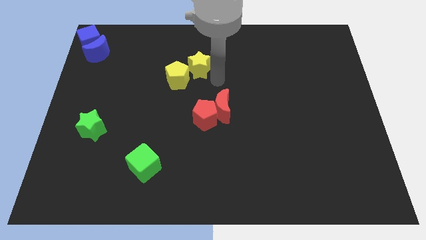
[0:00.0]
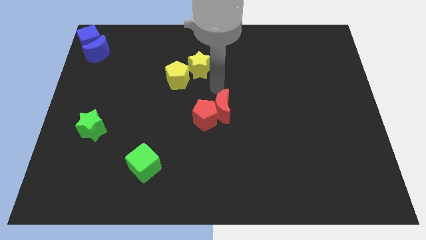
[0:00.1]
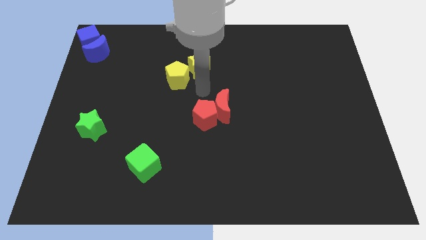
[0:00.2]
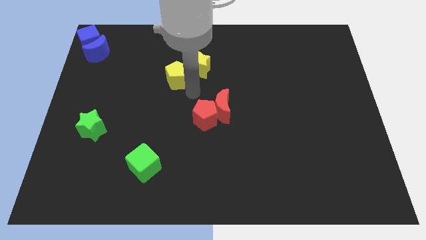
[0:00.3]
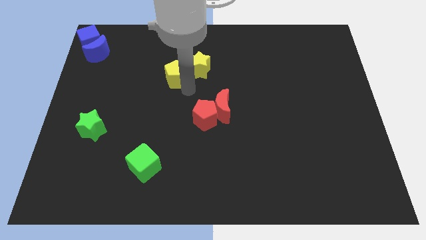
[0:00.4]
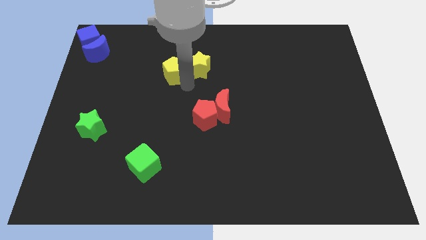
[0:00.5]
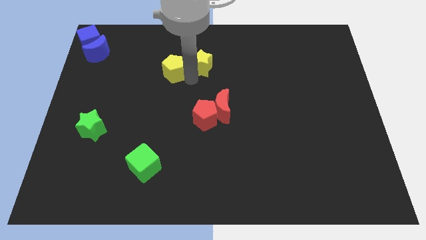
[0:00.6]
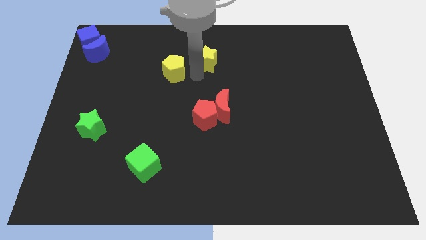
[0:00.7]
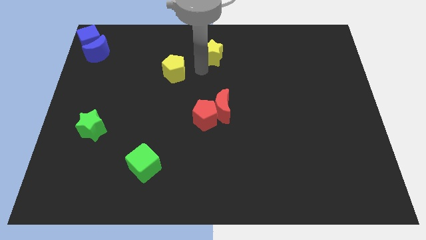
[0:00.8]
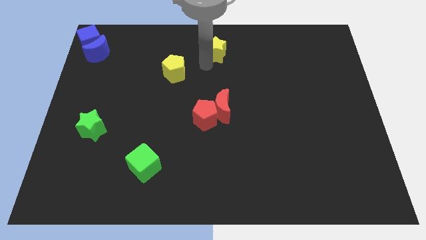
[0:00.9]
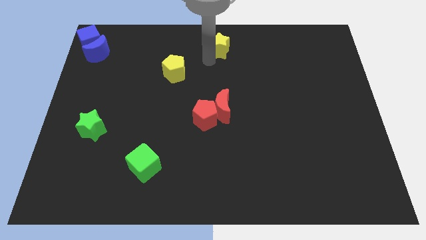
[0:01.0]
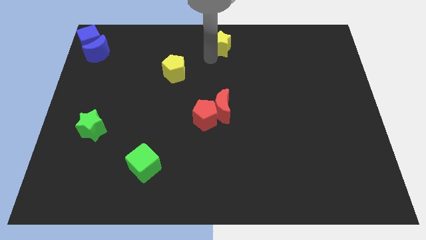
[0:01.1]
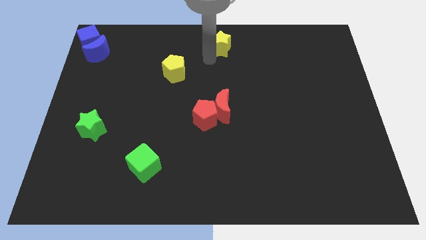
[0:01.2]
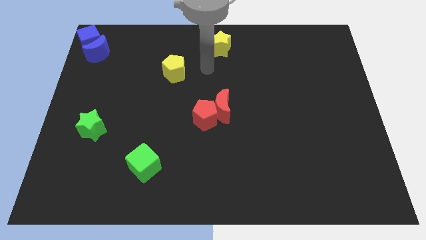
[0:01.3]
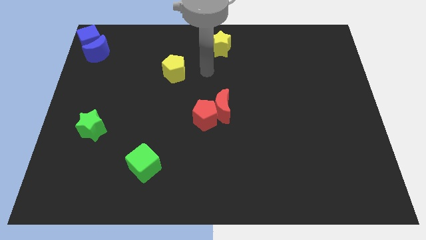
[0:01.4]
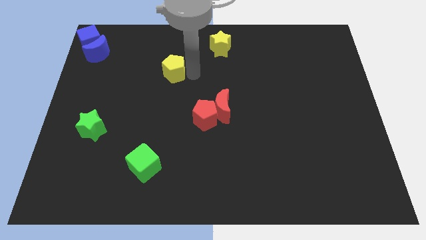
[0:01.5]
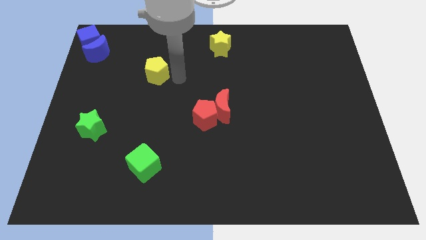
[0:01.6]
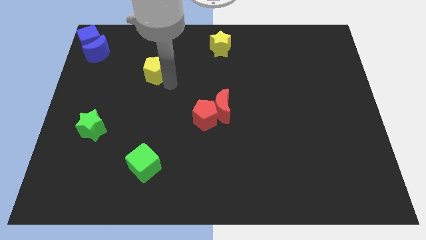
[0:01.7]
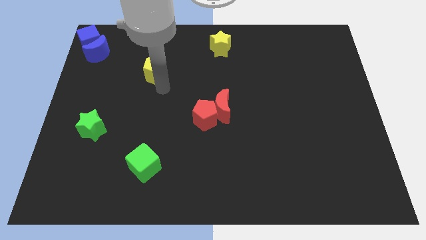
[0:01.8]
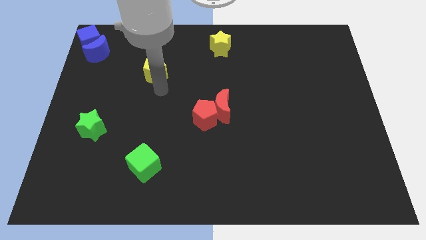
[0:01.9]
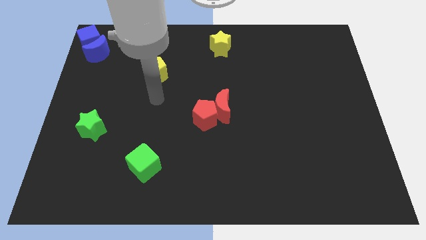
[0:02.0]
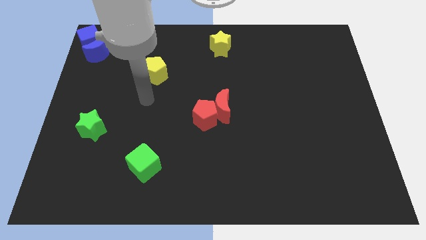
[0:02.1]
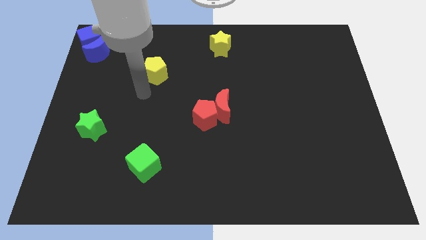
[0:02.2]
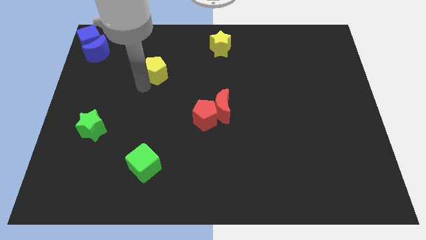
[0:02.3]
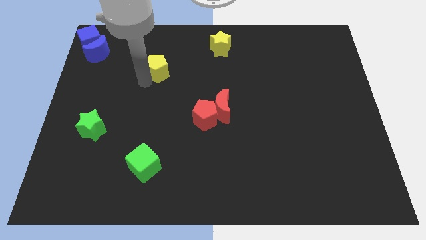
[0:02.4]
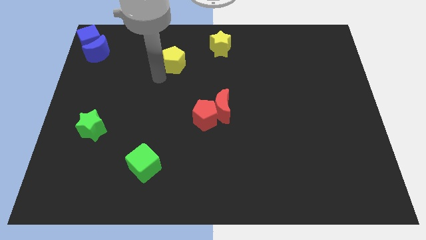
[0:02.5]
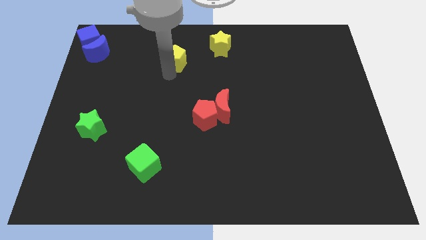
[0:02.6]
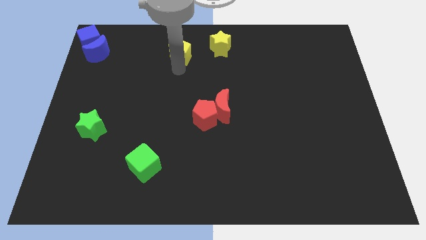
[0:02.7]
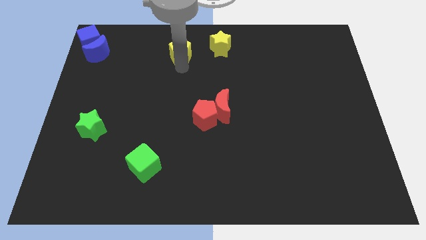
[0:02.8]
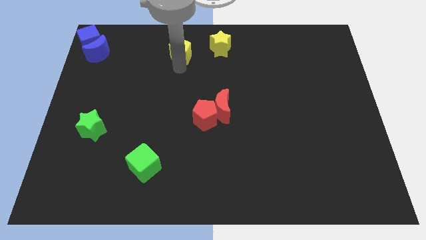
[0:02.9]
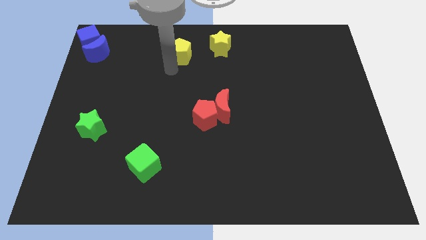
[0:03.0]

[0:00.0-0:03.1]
separate the yellow blocks

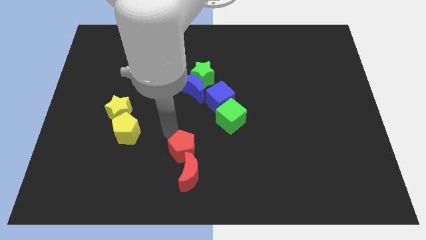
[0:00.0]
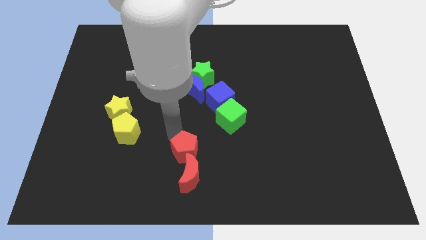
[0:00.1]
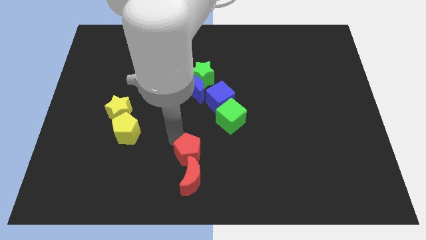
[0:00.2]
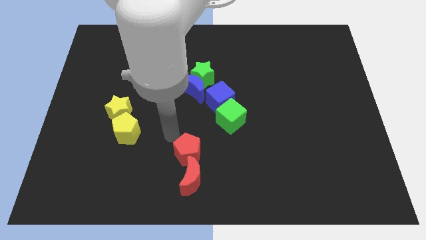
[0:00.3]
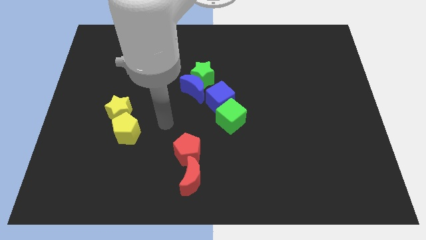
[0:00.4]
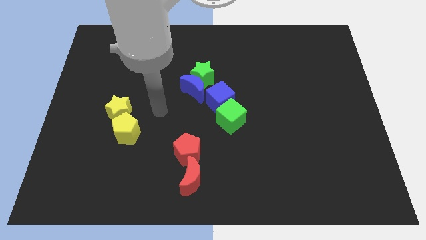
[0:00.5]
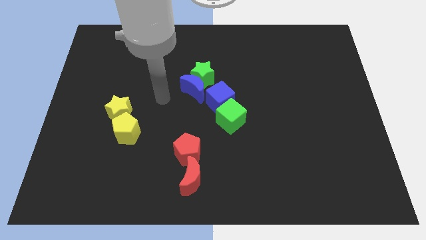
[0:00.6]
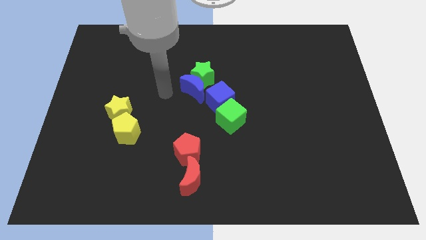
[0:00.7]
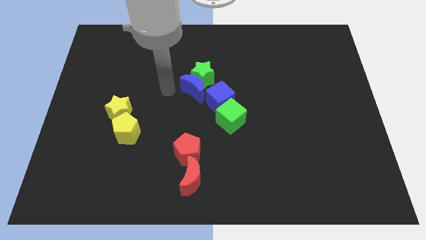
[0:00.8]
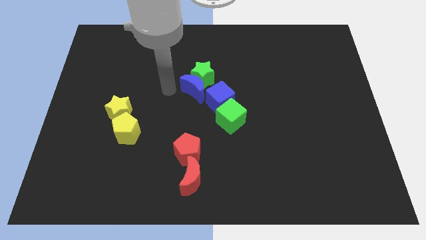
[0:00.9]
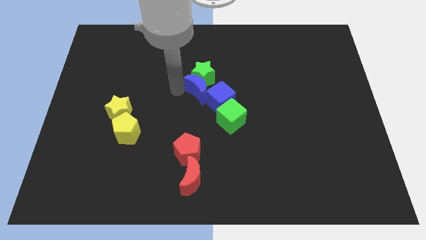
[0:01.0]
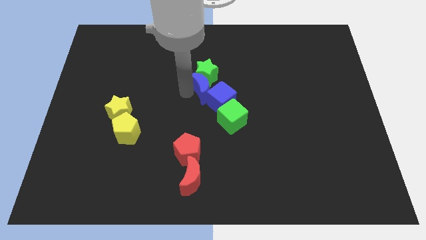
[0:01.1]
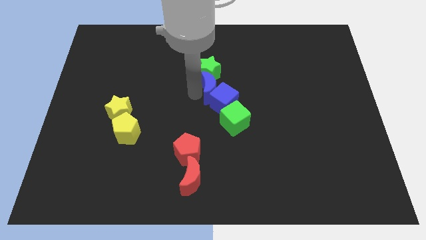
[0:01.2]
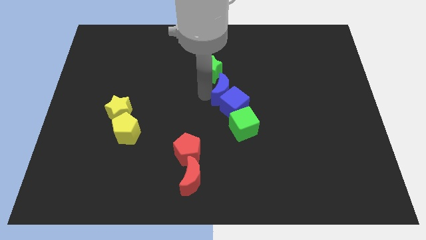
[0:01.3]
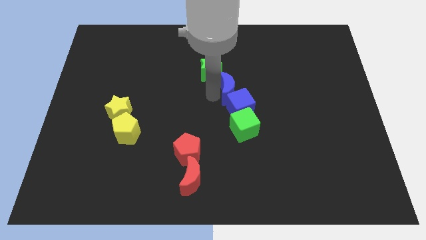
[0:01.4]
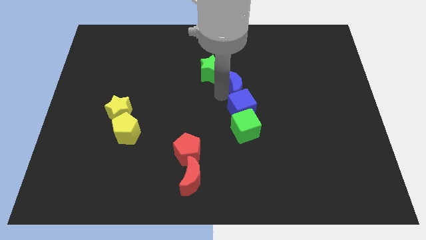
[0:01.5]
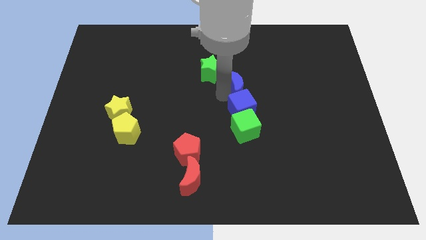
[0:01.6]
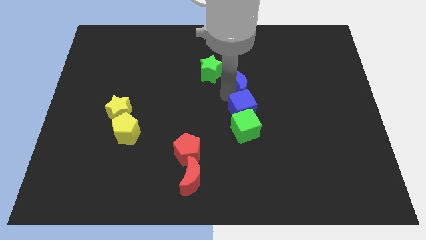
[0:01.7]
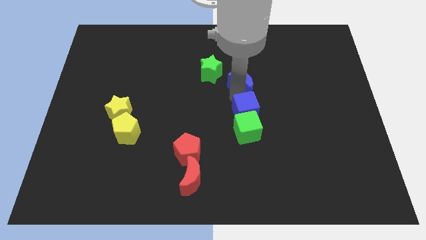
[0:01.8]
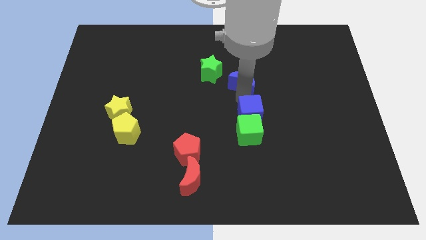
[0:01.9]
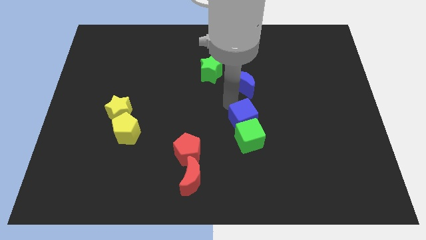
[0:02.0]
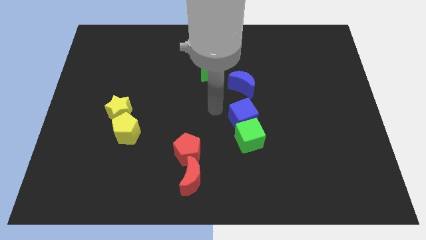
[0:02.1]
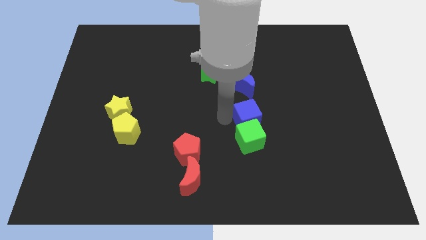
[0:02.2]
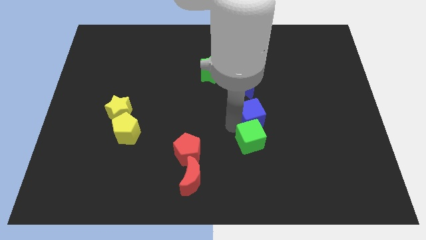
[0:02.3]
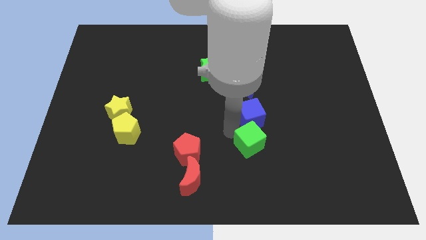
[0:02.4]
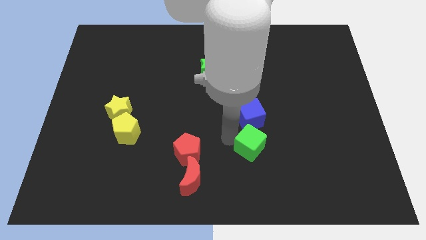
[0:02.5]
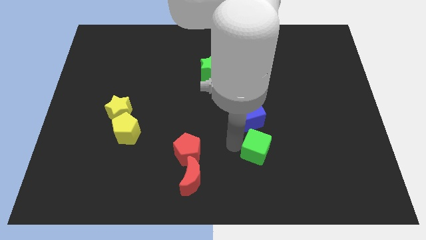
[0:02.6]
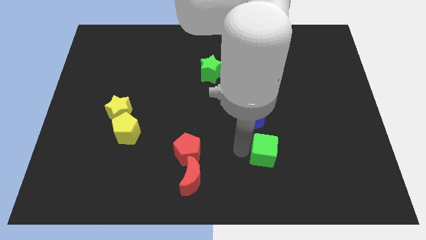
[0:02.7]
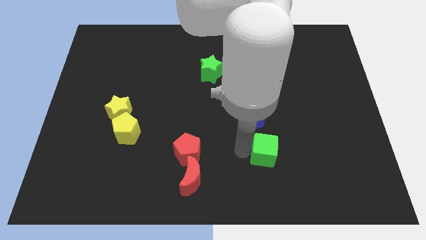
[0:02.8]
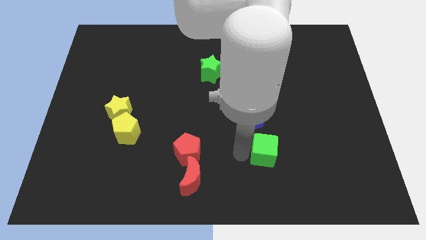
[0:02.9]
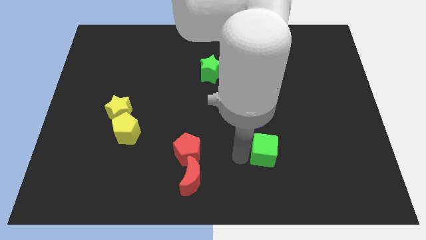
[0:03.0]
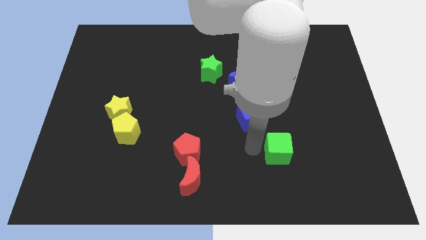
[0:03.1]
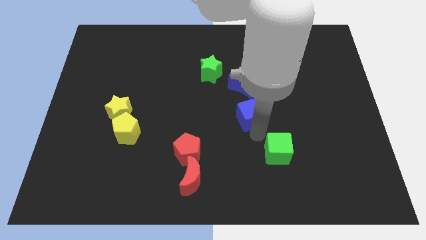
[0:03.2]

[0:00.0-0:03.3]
separate the blue cube and green cube

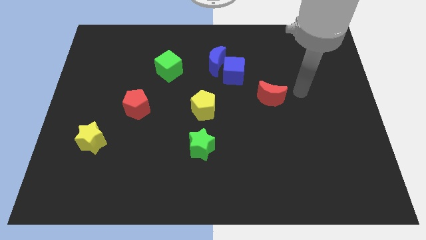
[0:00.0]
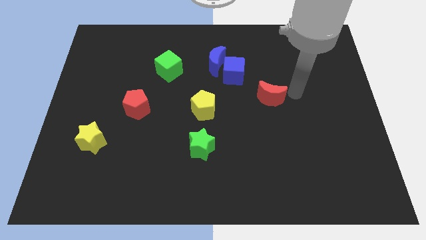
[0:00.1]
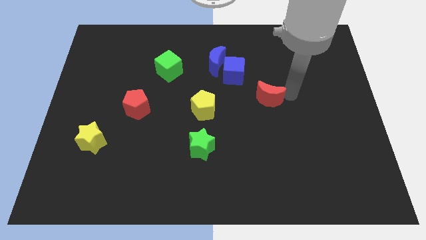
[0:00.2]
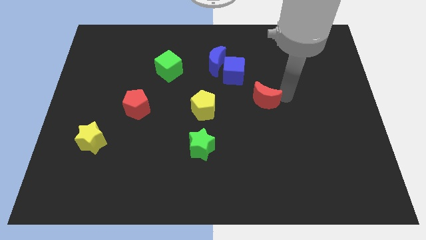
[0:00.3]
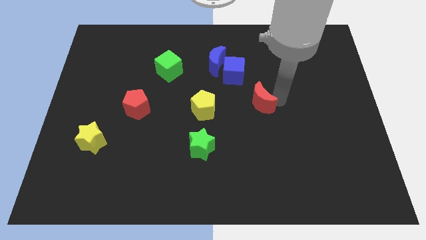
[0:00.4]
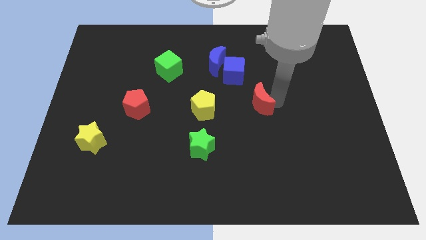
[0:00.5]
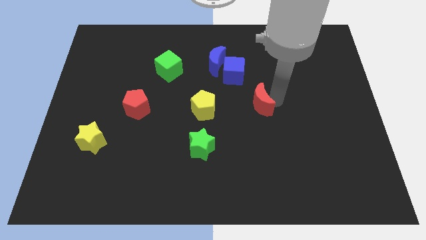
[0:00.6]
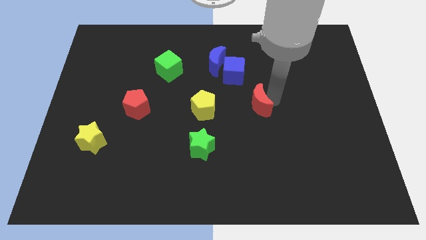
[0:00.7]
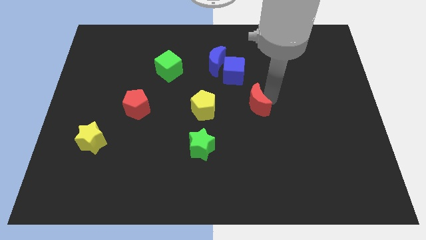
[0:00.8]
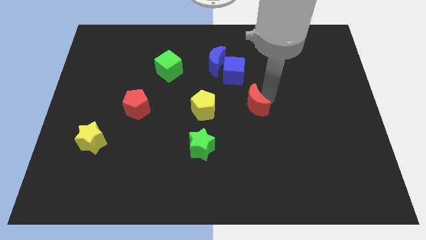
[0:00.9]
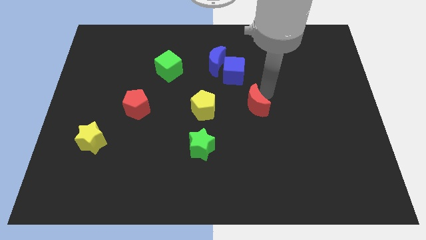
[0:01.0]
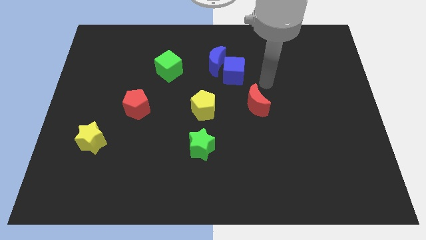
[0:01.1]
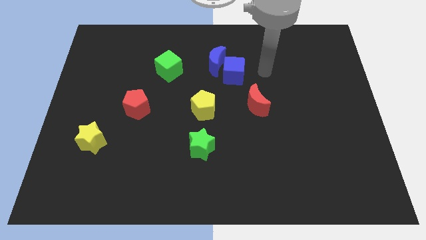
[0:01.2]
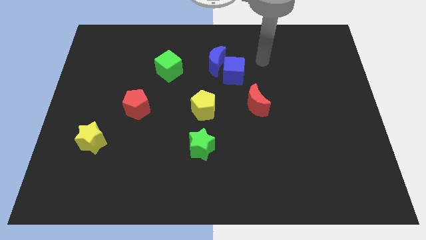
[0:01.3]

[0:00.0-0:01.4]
push the red crescent slightly towards the yellow pentagon

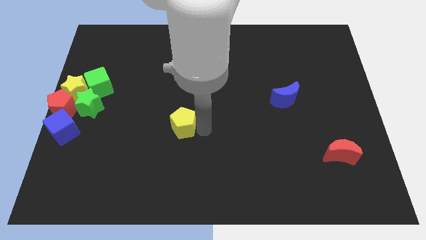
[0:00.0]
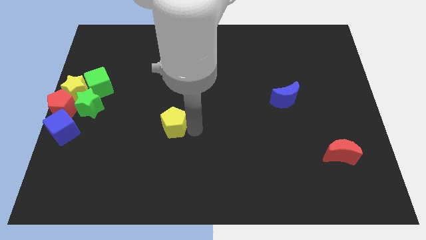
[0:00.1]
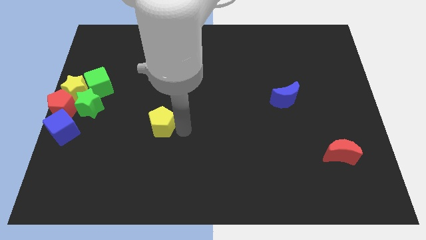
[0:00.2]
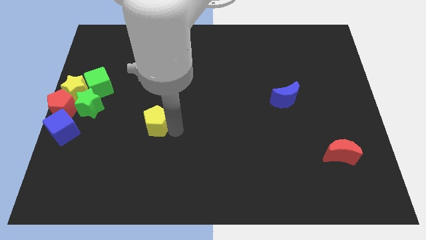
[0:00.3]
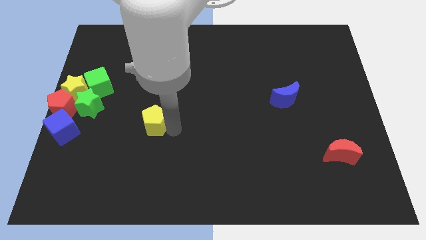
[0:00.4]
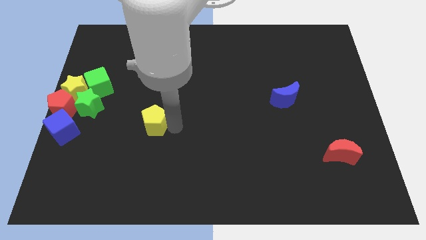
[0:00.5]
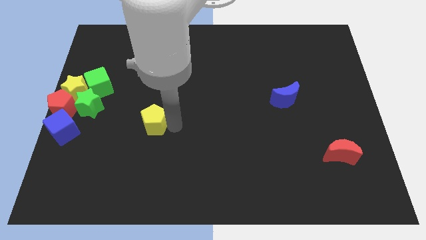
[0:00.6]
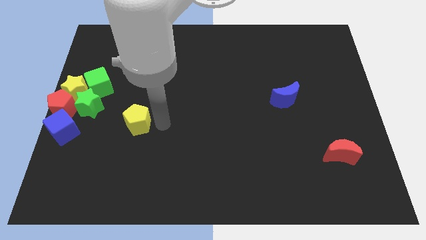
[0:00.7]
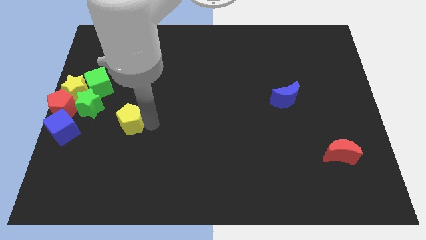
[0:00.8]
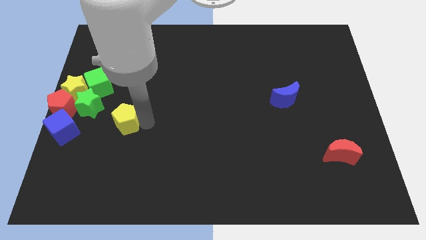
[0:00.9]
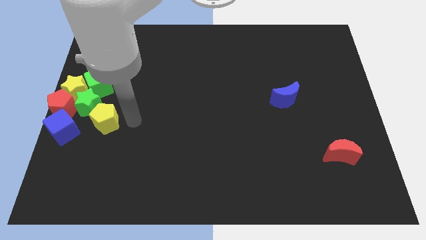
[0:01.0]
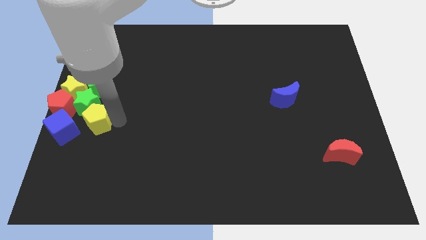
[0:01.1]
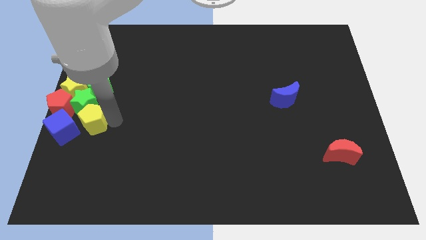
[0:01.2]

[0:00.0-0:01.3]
push the yellow pentagon into the group of blocks
